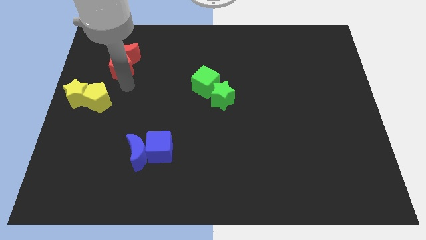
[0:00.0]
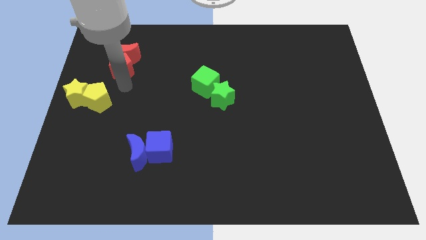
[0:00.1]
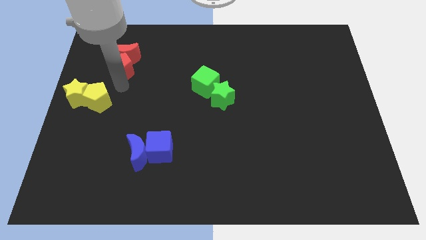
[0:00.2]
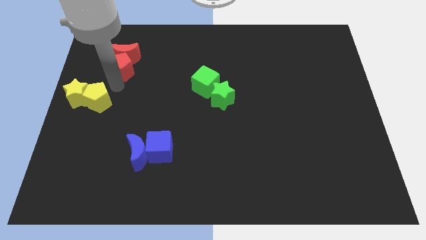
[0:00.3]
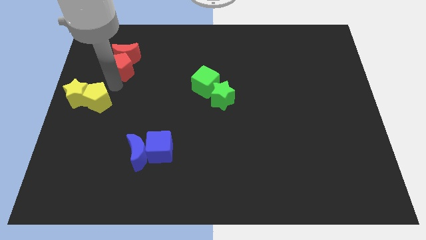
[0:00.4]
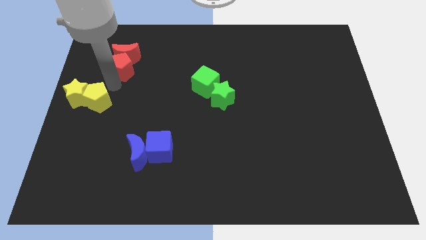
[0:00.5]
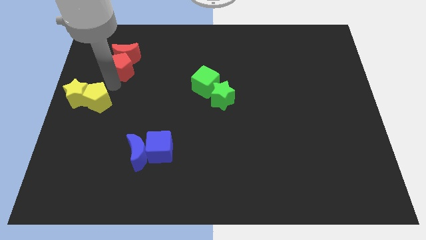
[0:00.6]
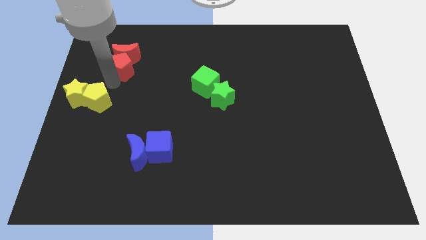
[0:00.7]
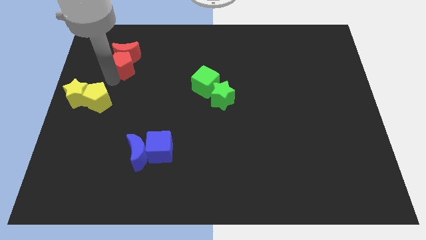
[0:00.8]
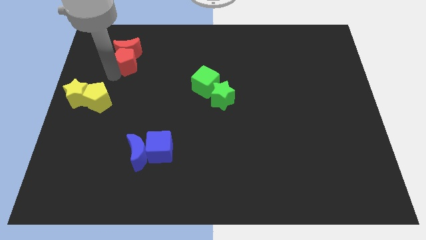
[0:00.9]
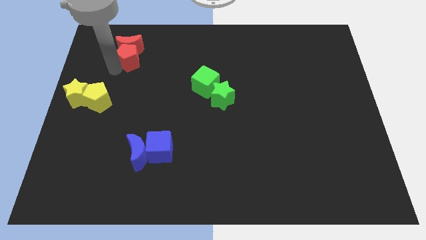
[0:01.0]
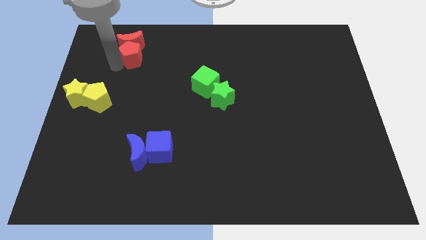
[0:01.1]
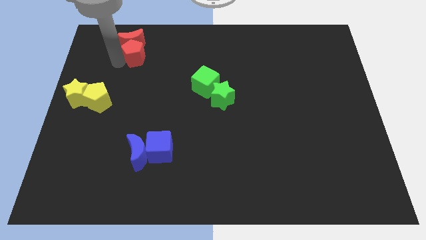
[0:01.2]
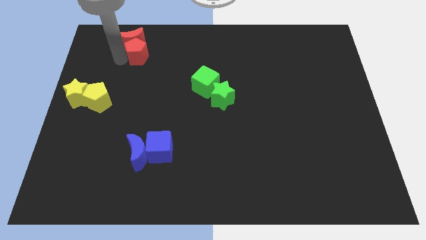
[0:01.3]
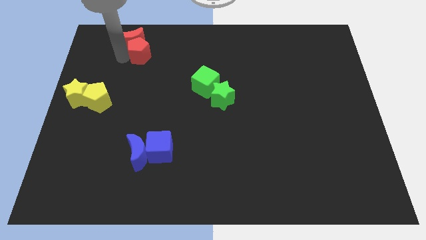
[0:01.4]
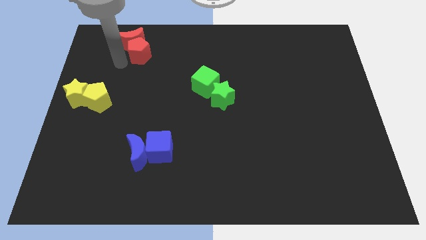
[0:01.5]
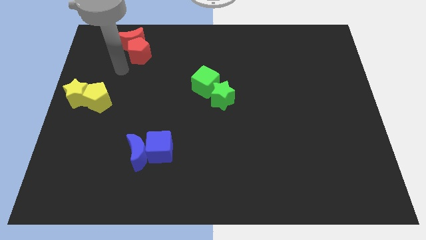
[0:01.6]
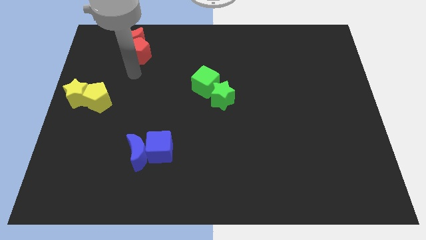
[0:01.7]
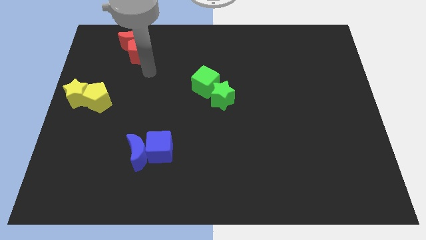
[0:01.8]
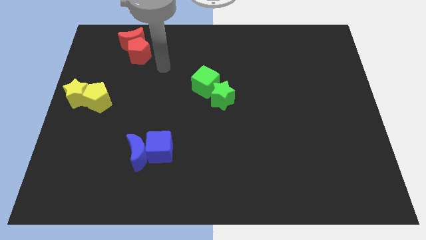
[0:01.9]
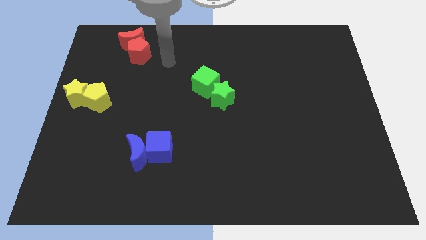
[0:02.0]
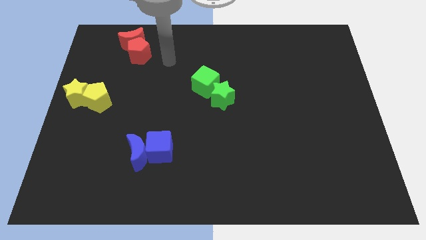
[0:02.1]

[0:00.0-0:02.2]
move red blocks towards top left

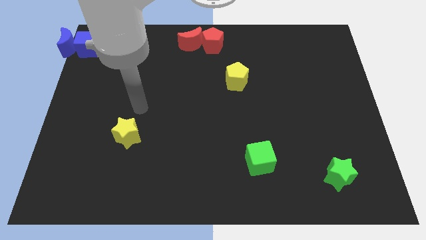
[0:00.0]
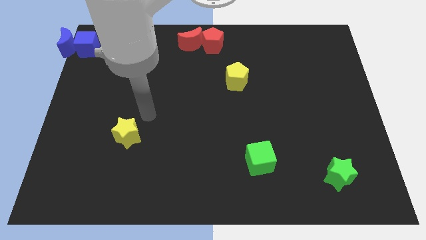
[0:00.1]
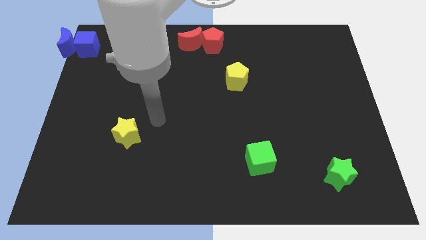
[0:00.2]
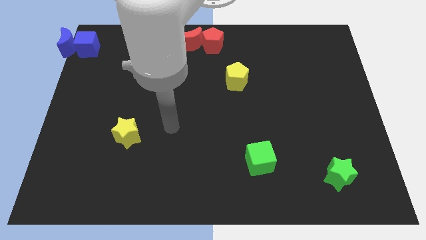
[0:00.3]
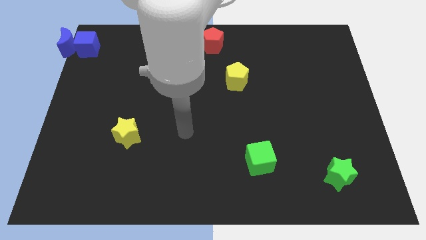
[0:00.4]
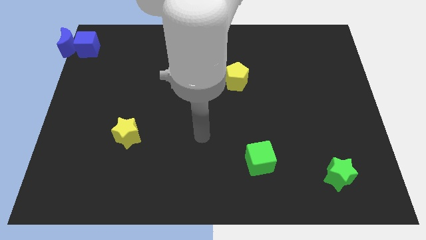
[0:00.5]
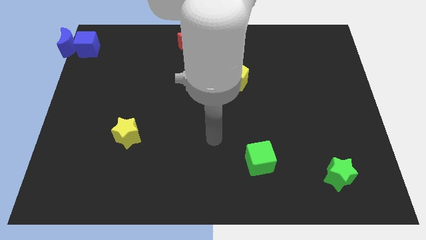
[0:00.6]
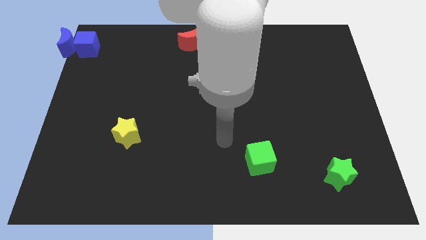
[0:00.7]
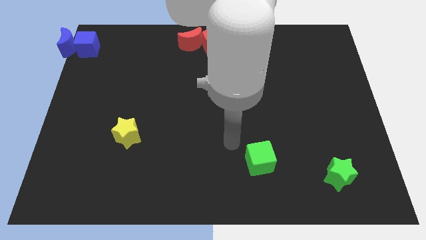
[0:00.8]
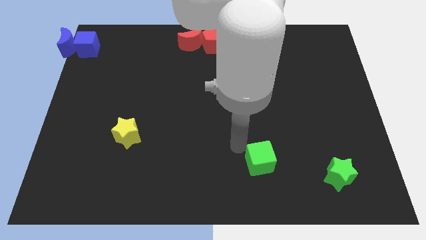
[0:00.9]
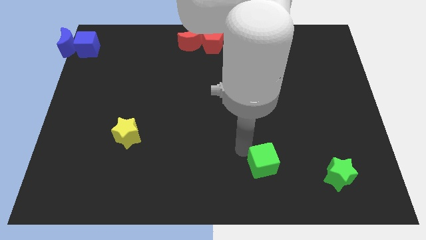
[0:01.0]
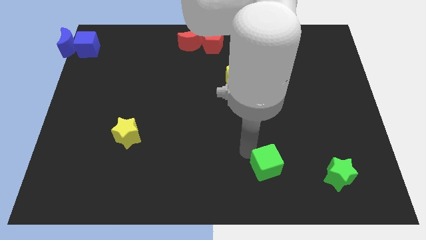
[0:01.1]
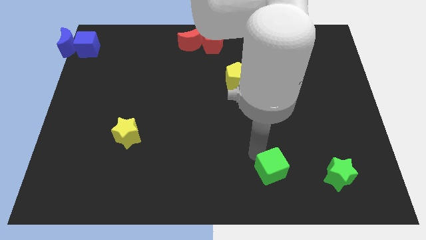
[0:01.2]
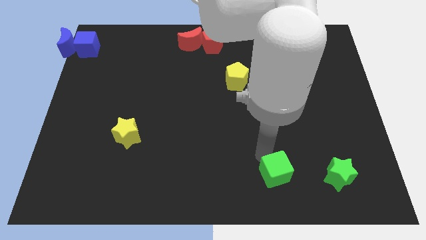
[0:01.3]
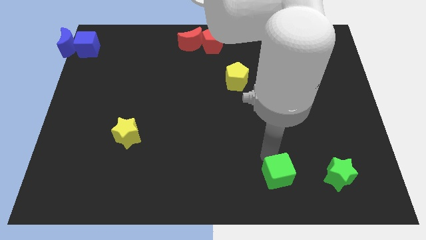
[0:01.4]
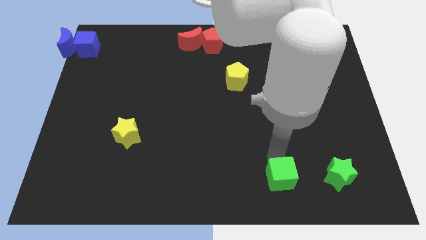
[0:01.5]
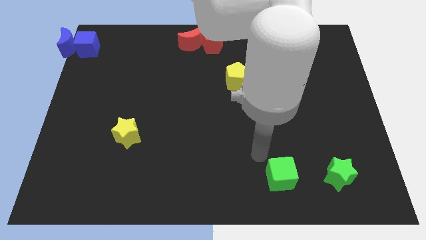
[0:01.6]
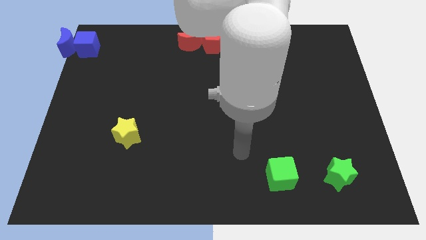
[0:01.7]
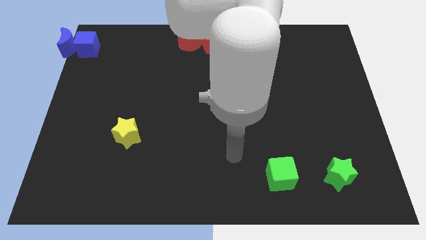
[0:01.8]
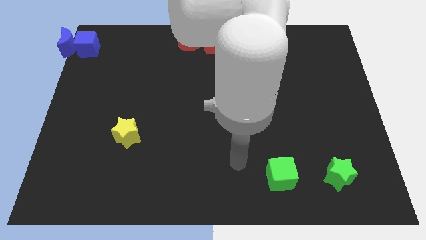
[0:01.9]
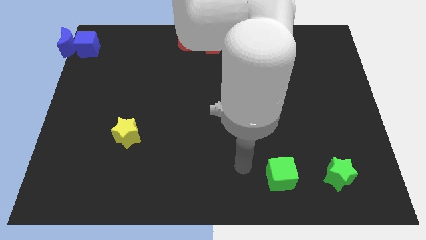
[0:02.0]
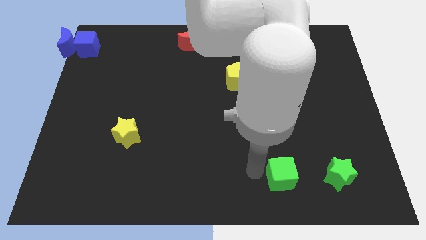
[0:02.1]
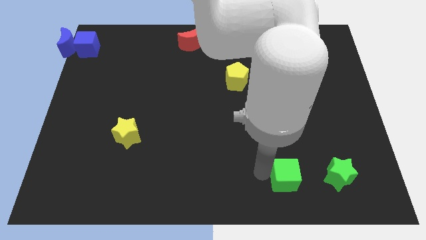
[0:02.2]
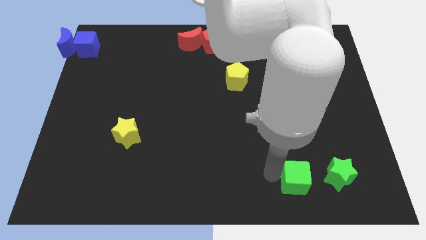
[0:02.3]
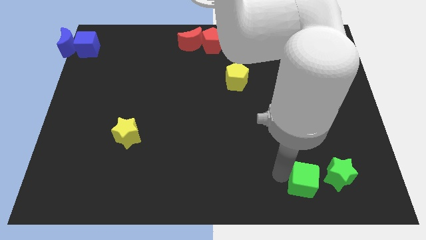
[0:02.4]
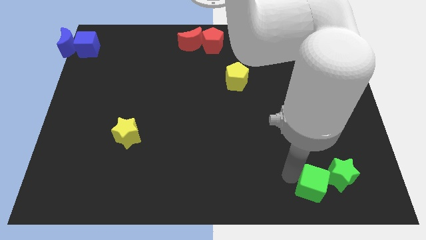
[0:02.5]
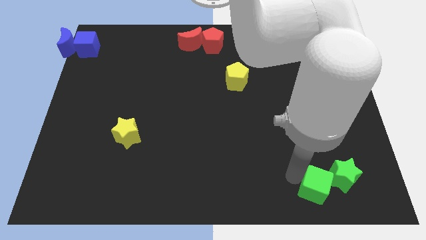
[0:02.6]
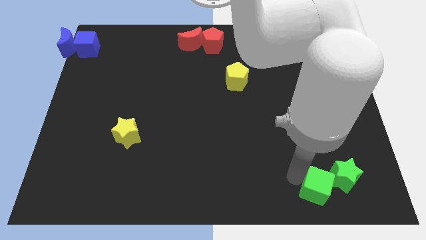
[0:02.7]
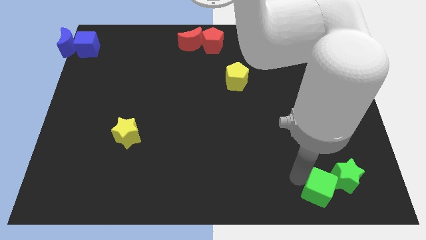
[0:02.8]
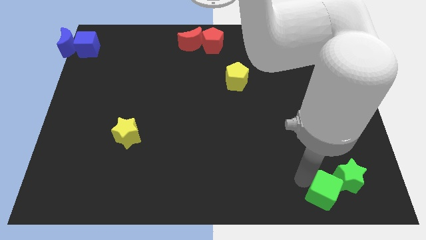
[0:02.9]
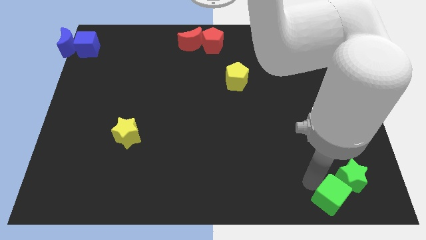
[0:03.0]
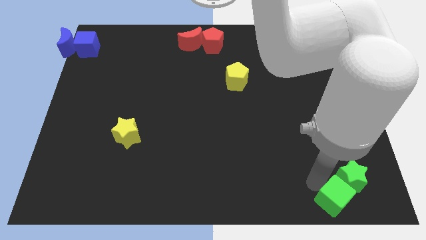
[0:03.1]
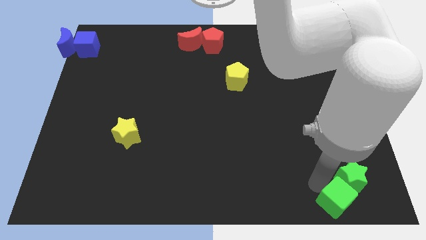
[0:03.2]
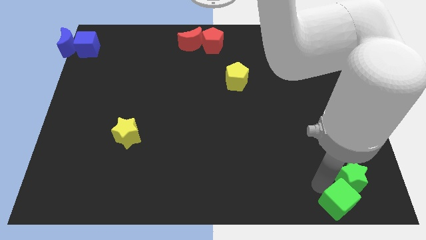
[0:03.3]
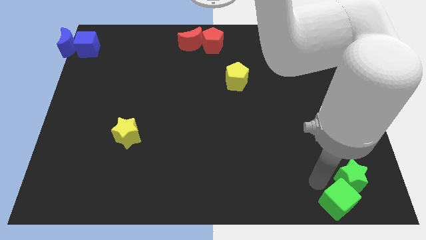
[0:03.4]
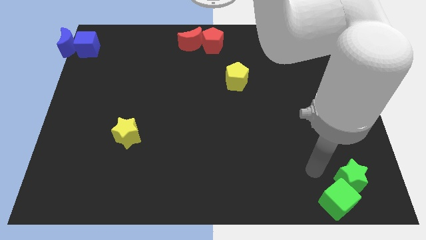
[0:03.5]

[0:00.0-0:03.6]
move the green cube into the green star

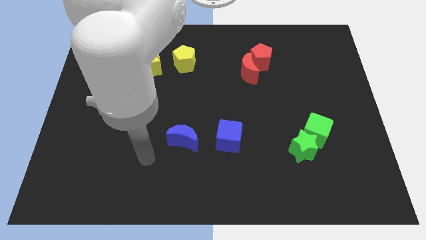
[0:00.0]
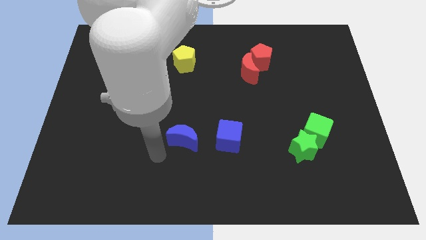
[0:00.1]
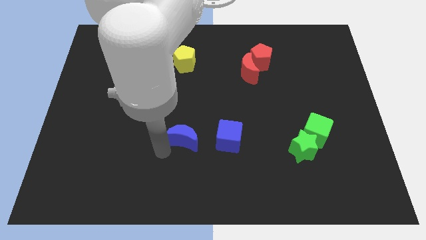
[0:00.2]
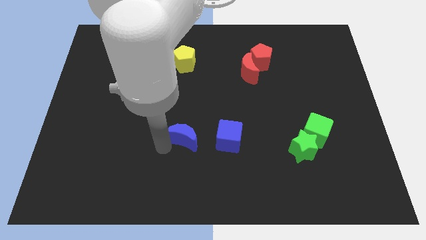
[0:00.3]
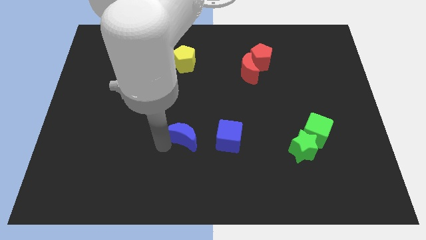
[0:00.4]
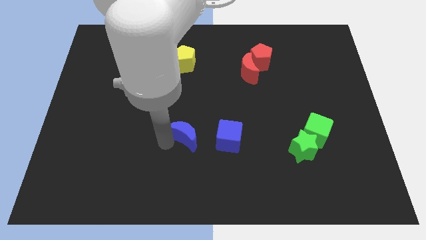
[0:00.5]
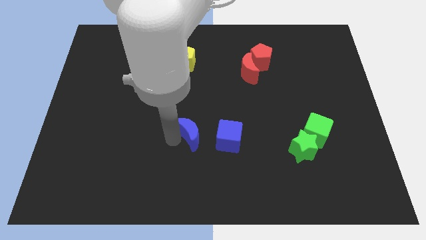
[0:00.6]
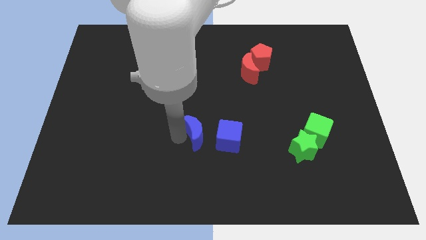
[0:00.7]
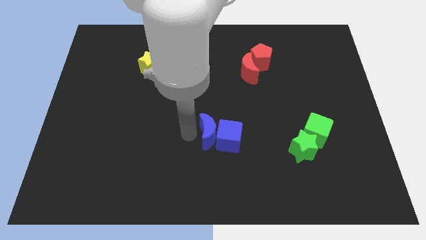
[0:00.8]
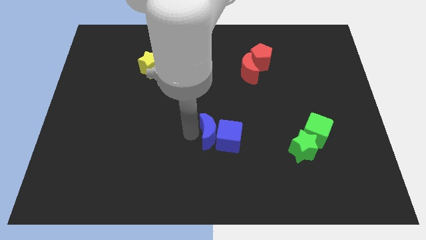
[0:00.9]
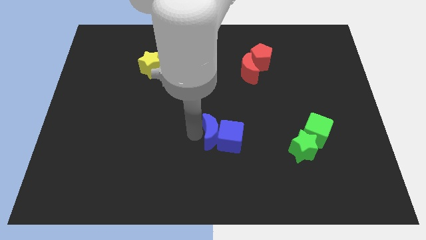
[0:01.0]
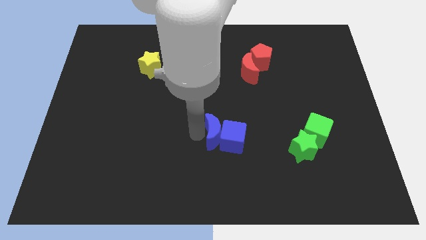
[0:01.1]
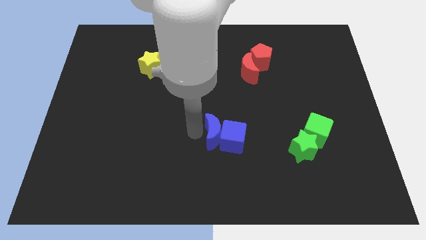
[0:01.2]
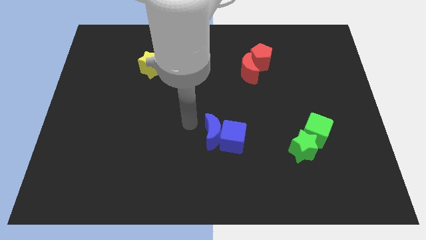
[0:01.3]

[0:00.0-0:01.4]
place the blue moon to the left side of the blue cube

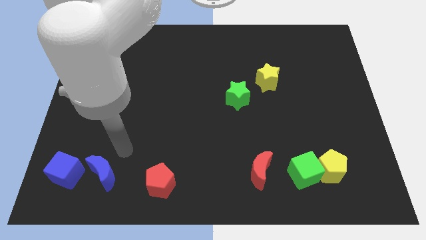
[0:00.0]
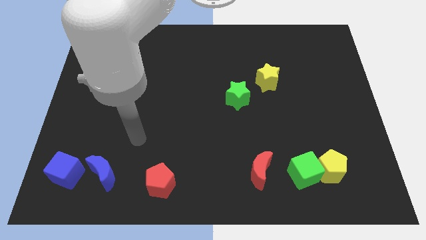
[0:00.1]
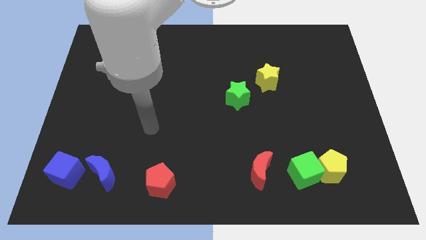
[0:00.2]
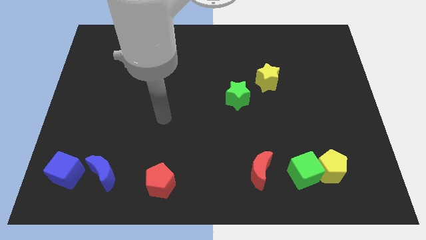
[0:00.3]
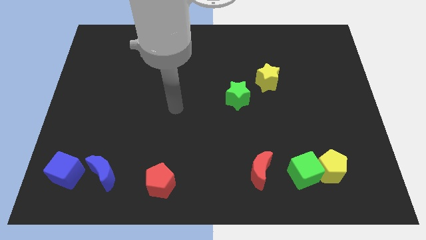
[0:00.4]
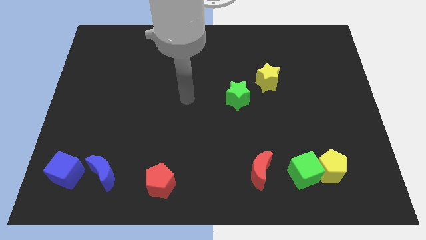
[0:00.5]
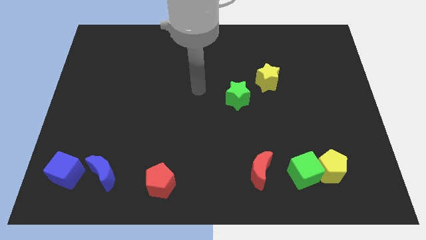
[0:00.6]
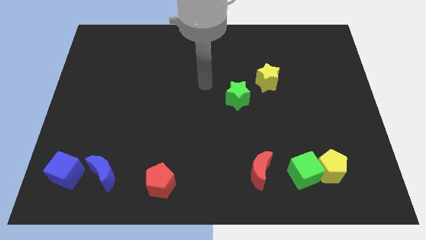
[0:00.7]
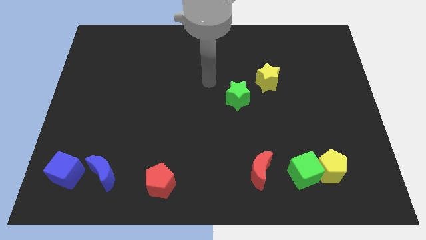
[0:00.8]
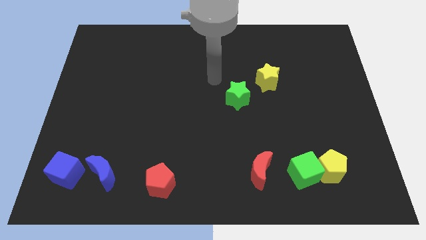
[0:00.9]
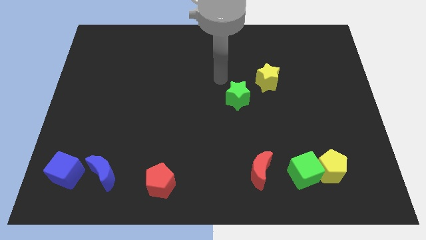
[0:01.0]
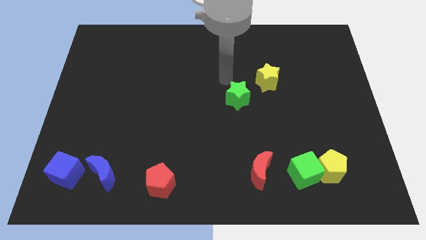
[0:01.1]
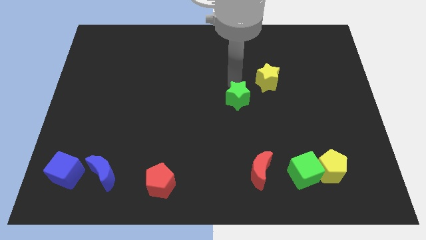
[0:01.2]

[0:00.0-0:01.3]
move the arm close to the green star
